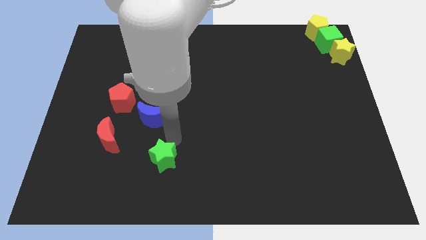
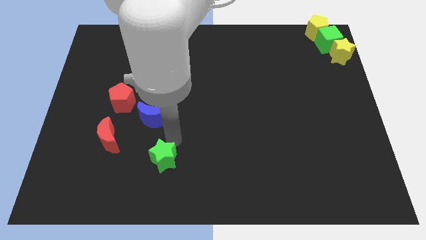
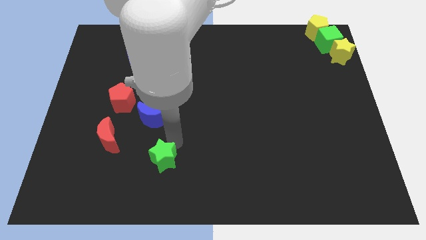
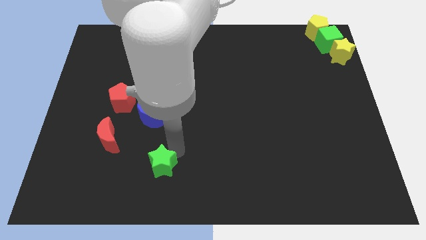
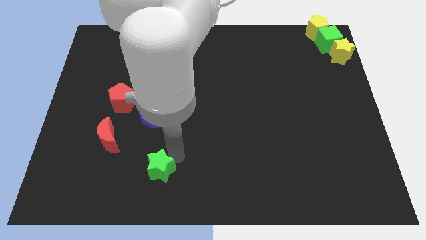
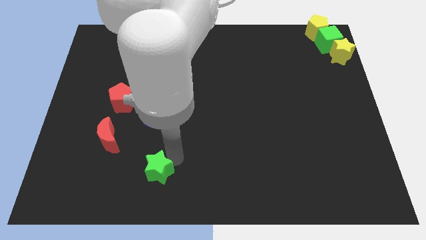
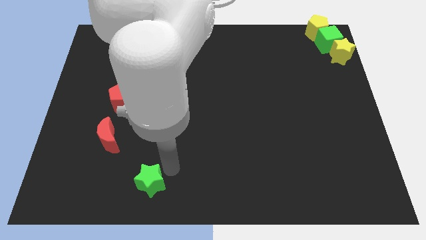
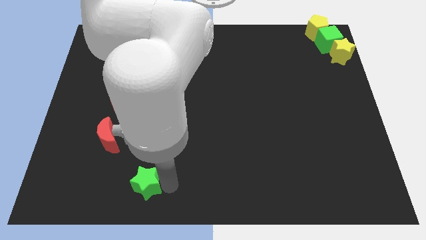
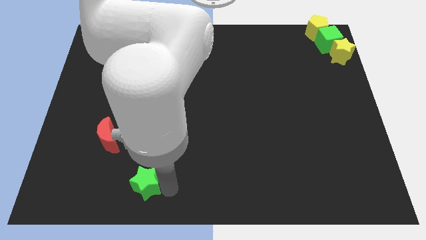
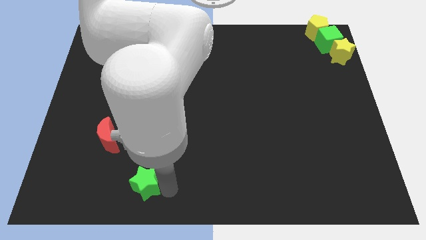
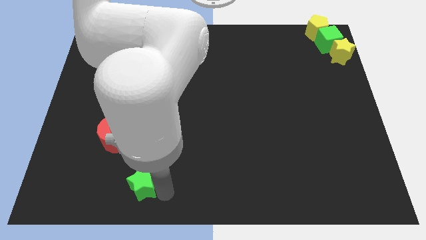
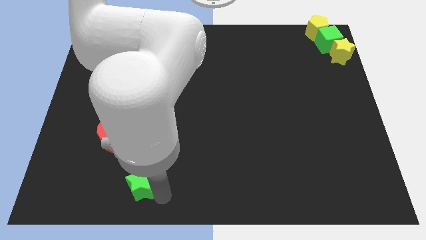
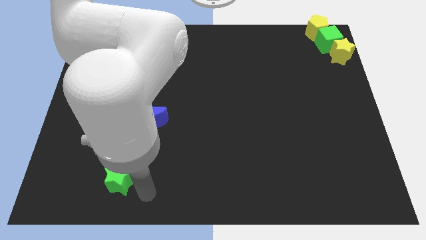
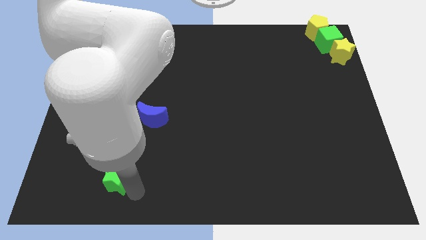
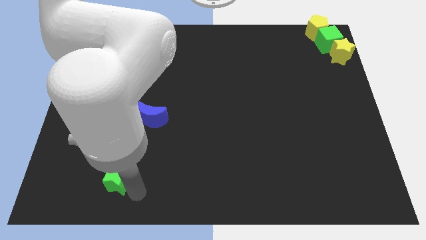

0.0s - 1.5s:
place the green star diagonally bottom right to the red moon

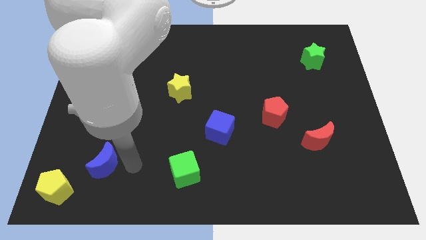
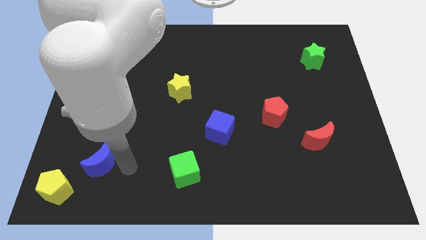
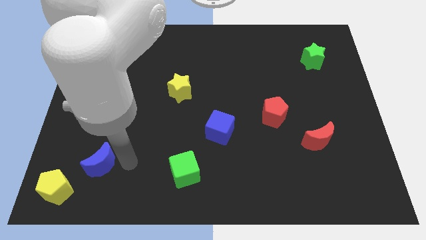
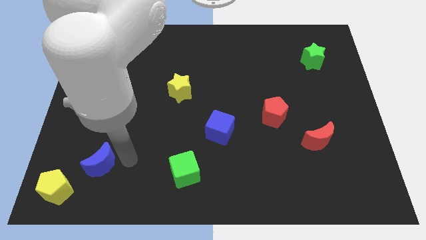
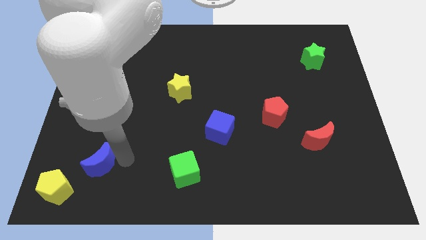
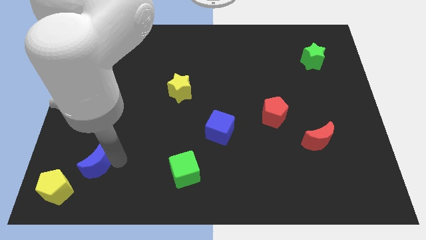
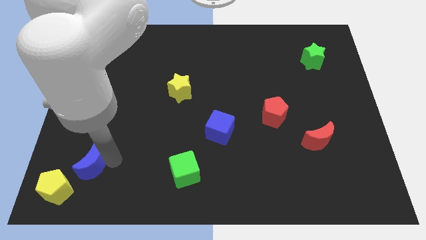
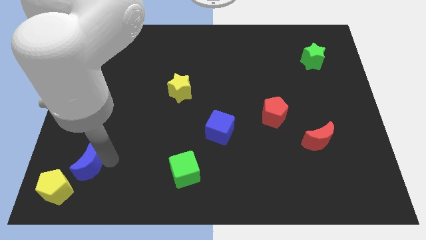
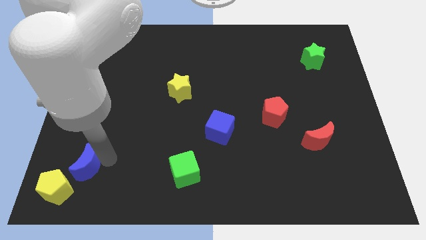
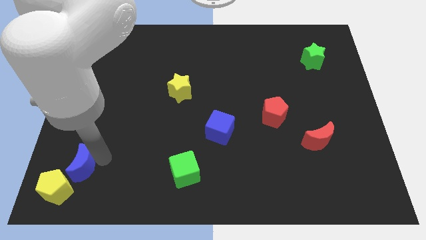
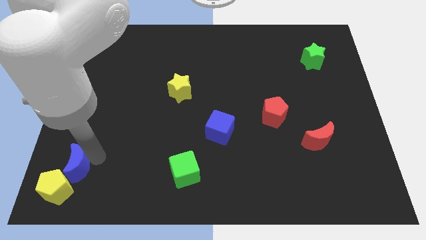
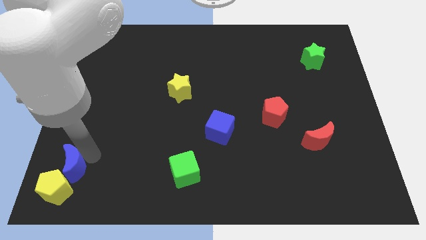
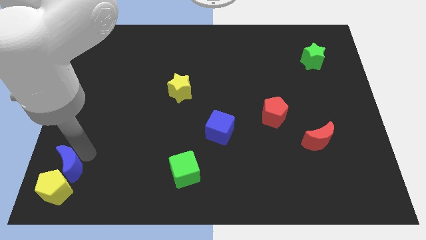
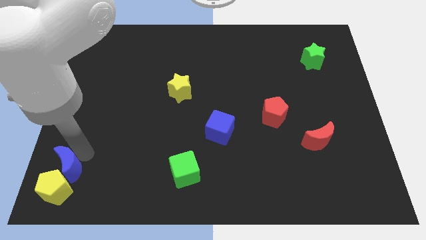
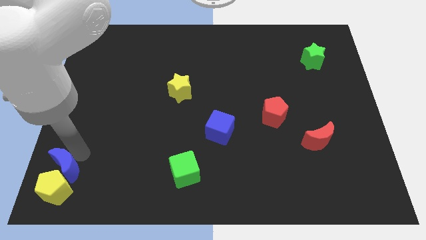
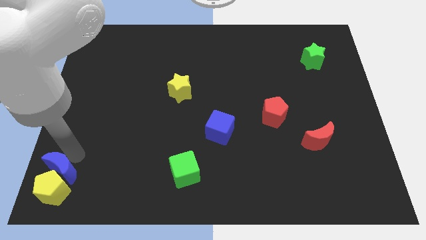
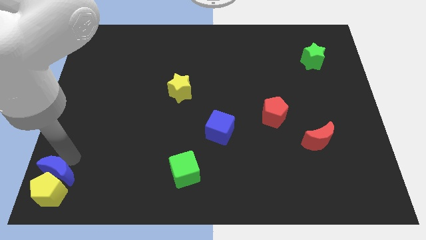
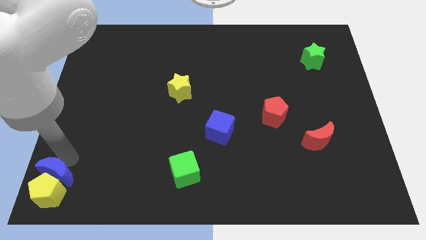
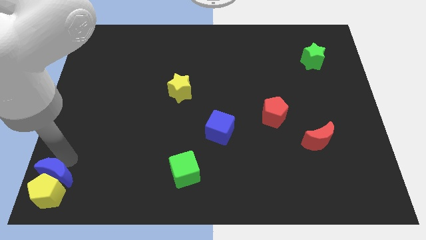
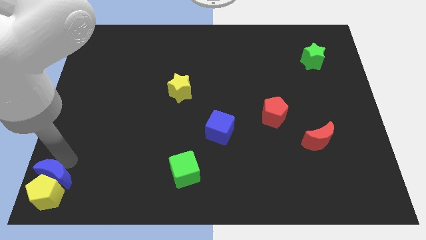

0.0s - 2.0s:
place blue moon to the top of yellow pentagon

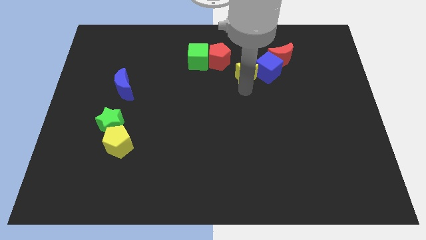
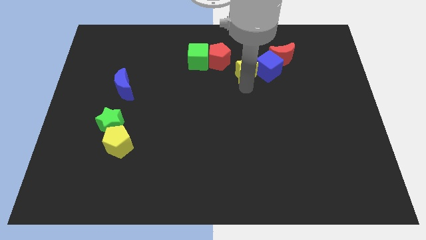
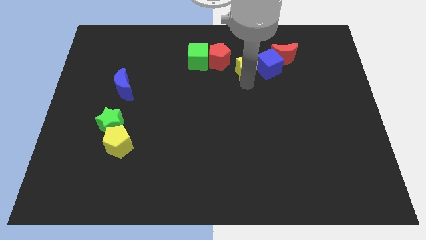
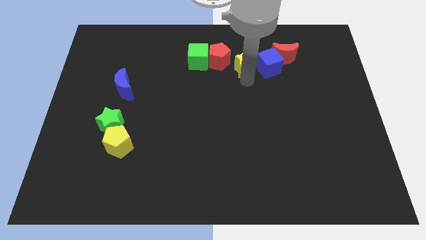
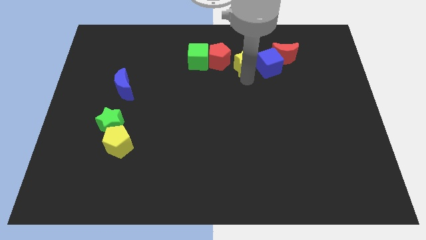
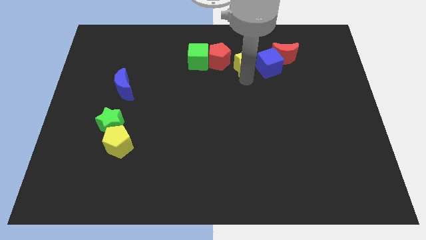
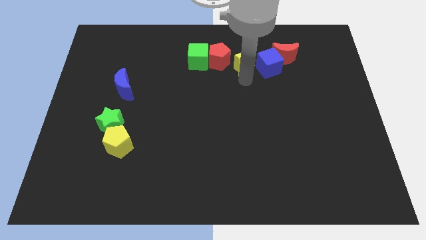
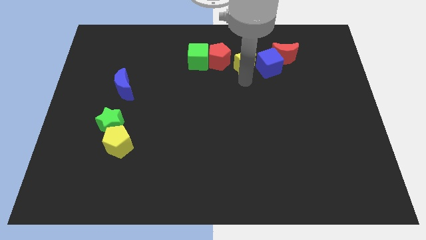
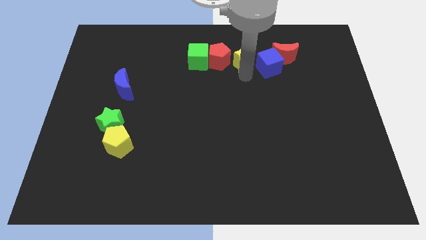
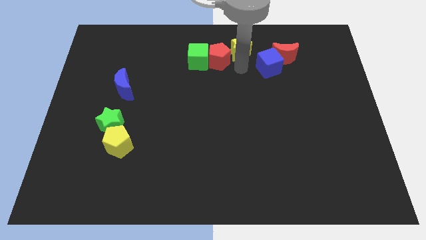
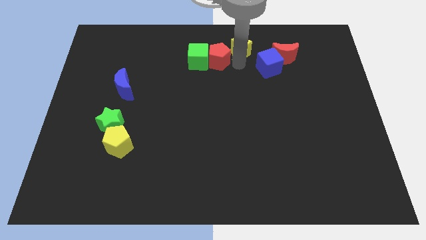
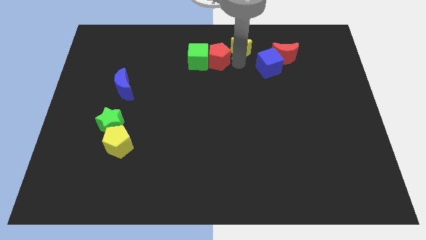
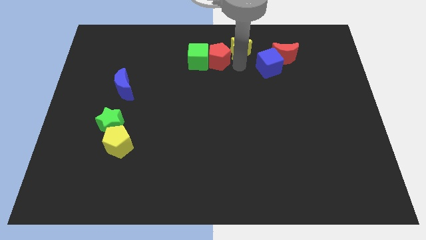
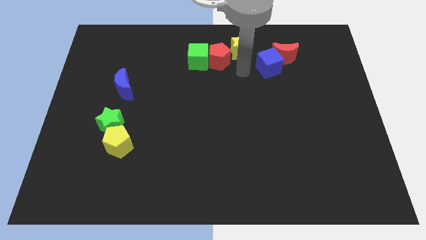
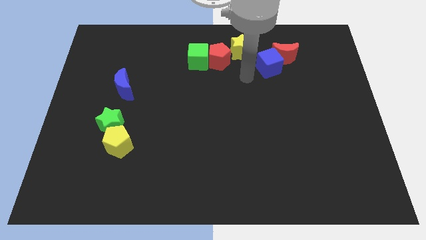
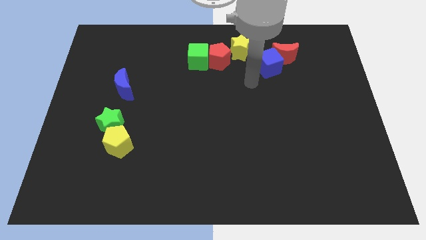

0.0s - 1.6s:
move yellow star to the top right of the red pentagon

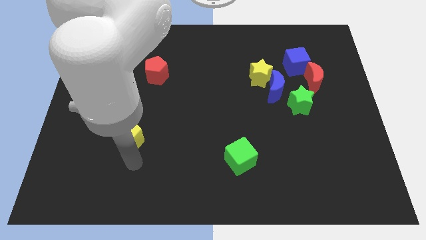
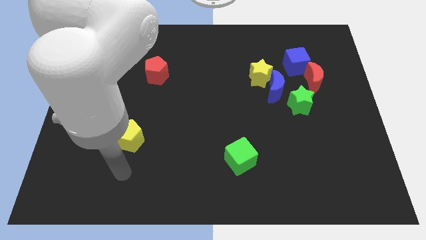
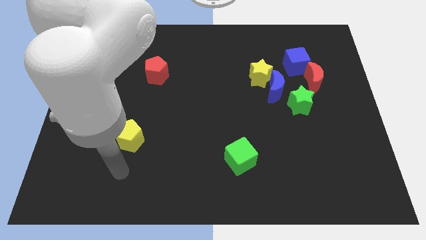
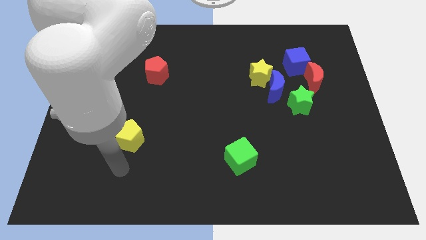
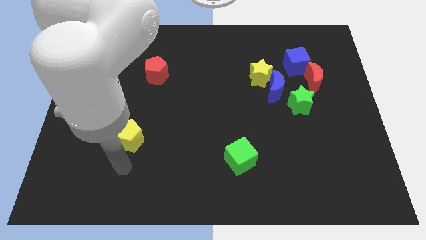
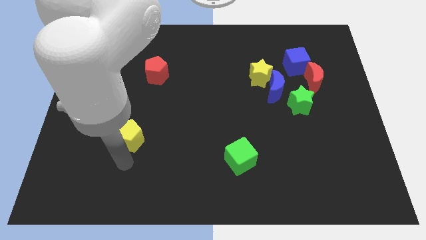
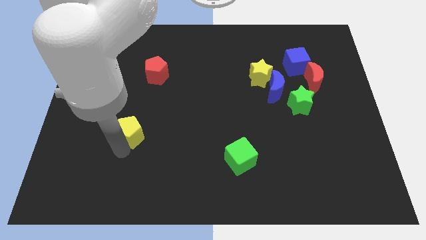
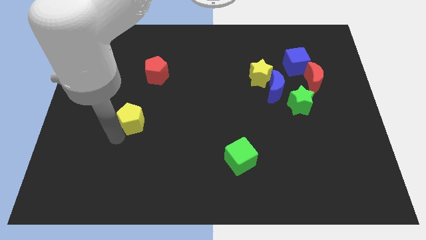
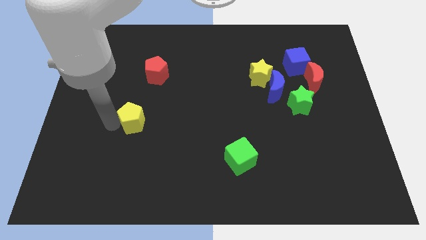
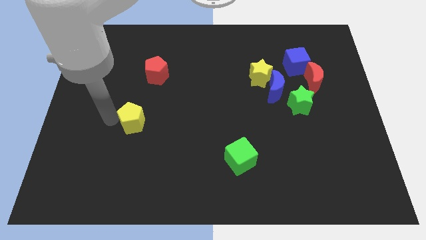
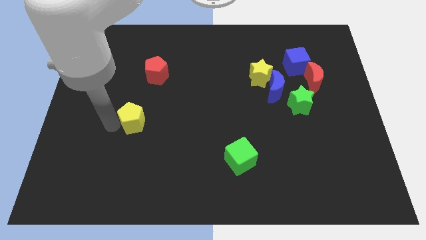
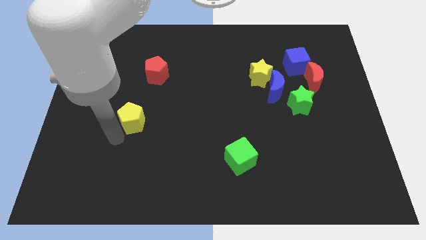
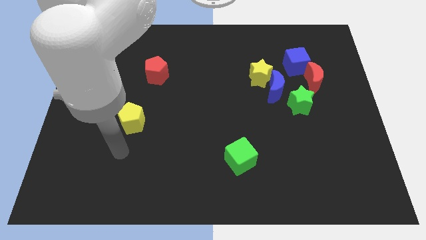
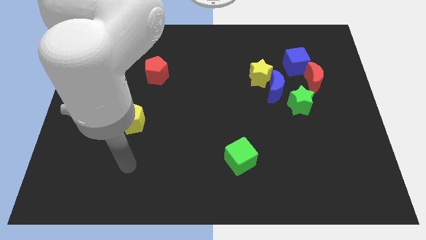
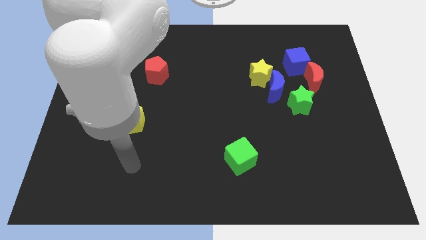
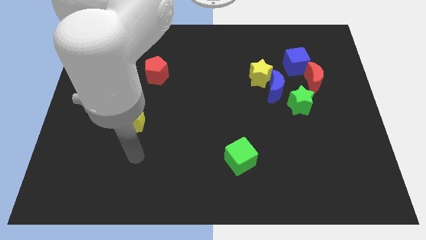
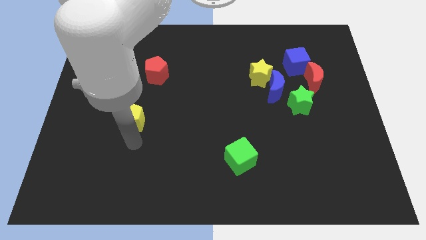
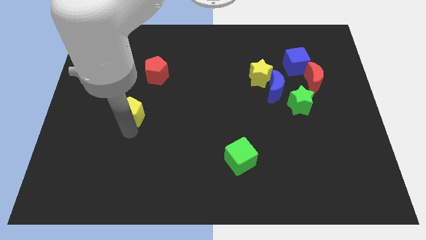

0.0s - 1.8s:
push yellow pentagon towards red pentagon

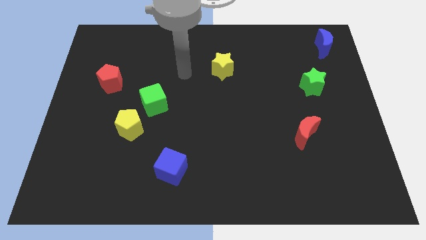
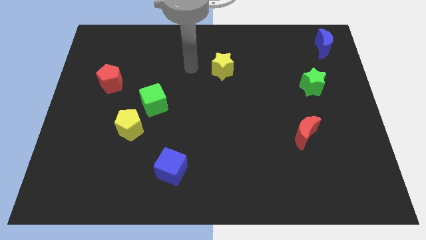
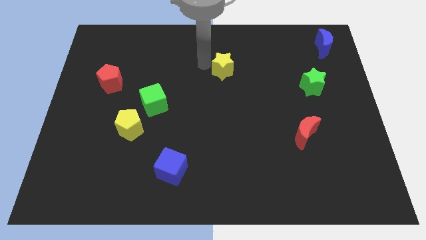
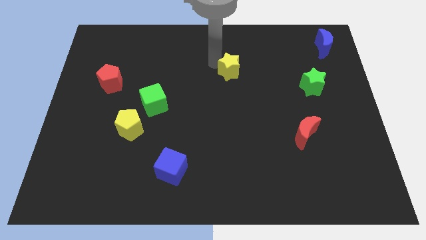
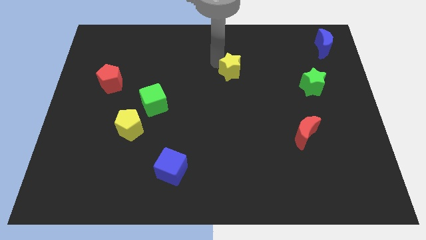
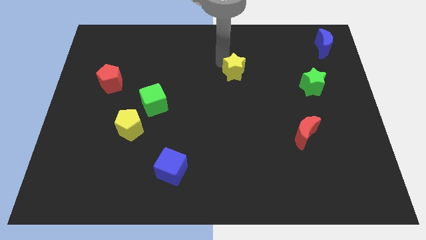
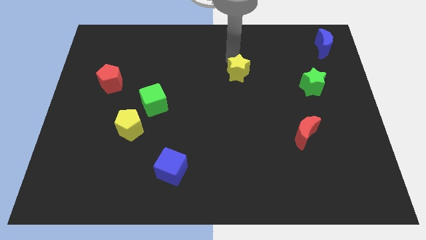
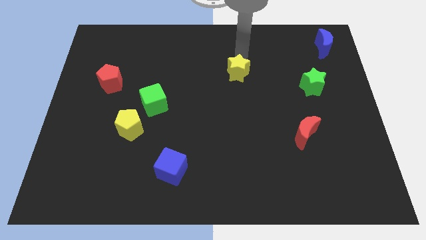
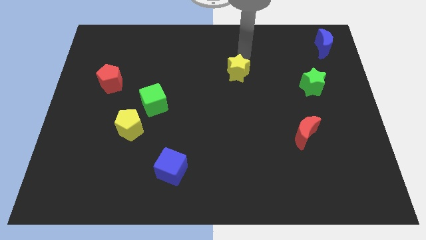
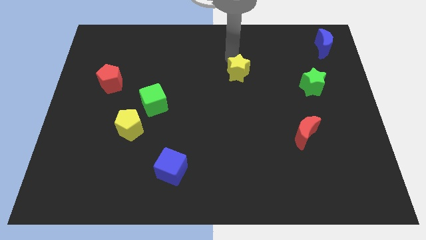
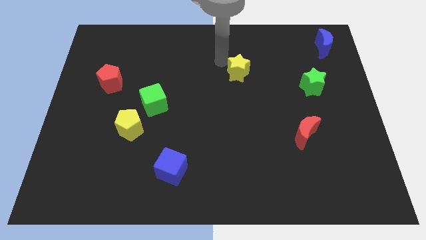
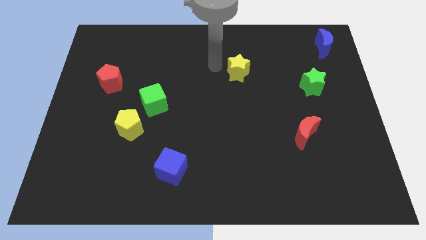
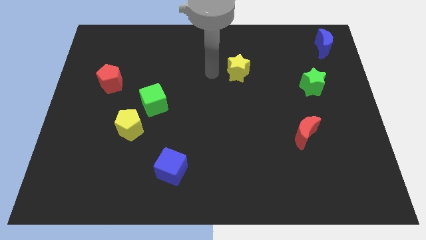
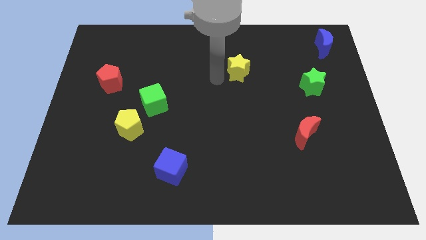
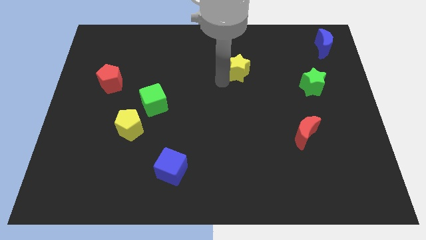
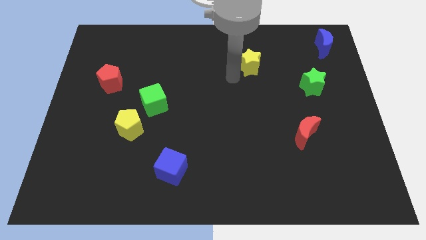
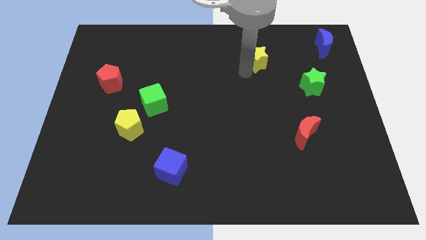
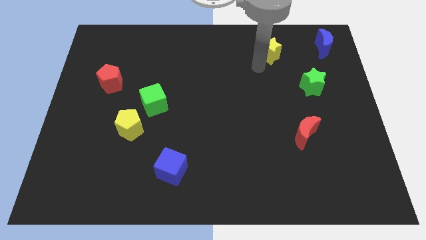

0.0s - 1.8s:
push yellow star diagonally to green star
